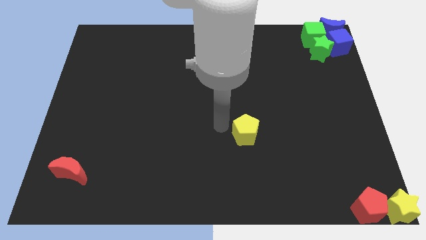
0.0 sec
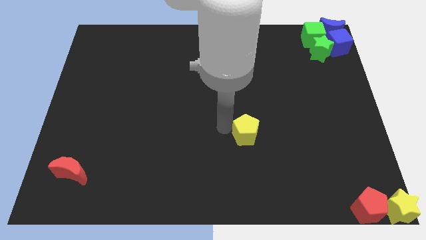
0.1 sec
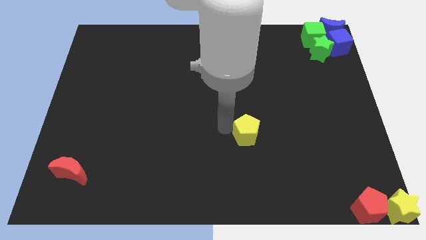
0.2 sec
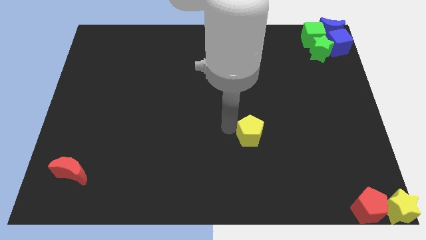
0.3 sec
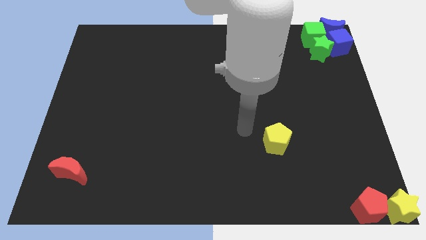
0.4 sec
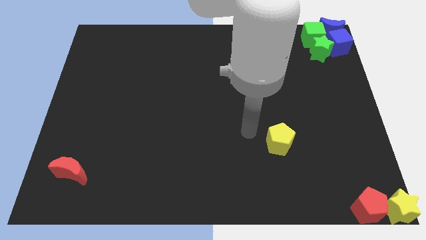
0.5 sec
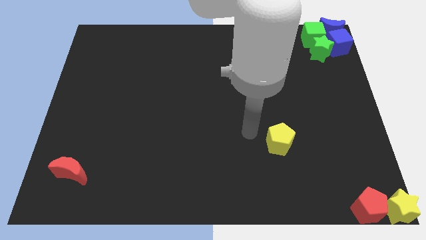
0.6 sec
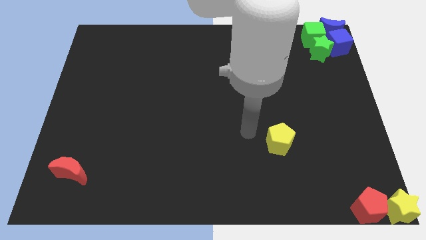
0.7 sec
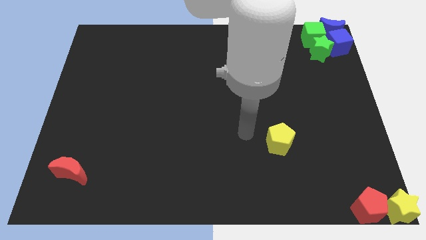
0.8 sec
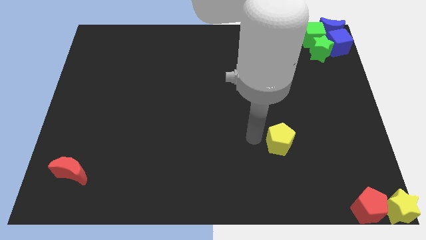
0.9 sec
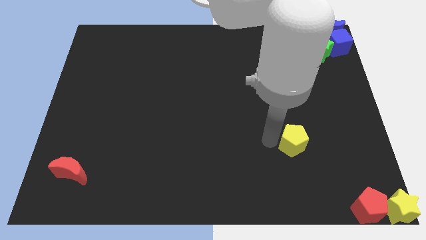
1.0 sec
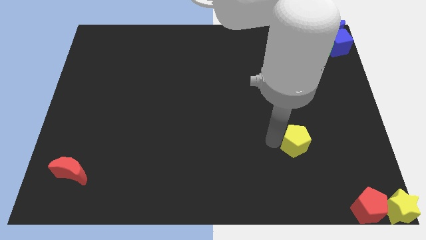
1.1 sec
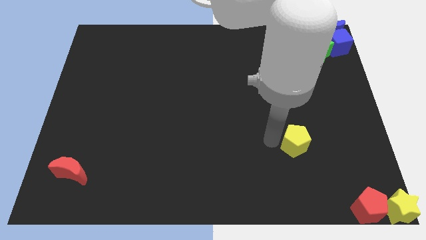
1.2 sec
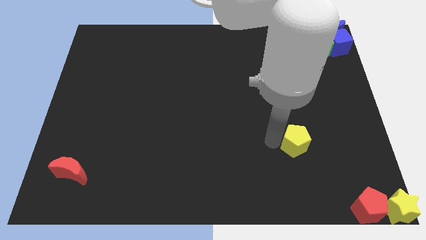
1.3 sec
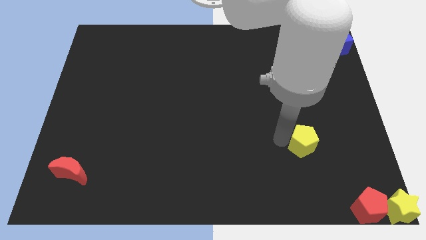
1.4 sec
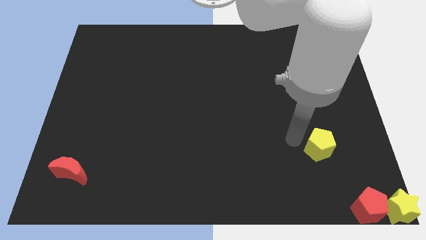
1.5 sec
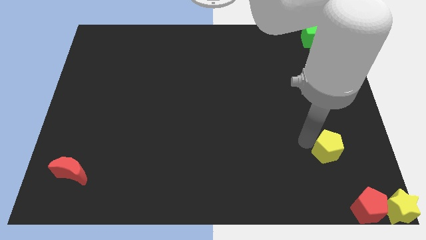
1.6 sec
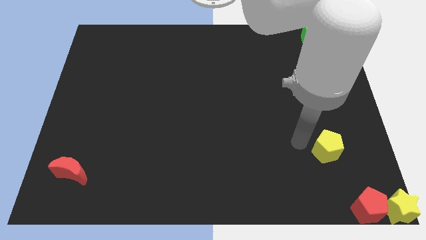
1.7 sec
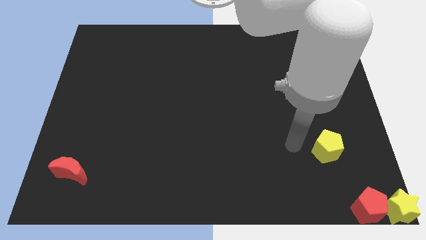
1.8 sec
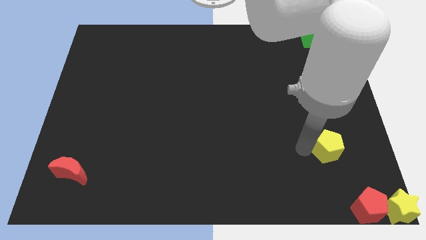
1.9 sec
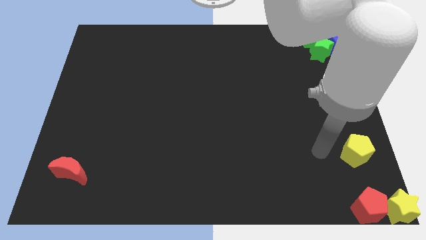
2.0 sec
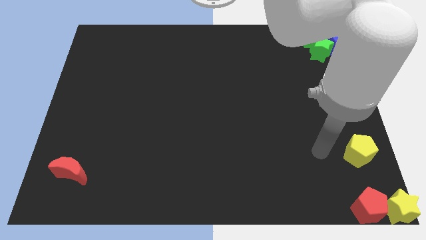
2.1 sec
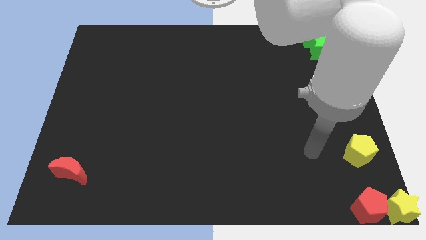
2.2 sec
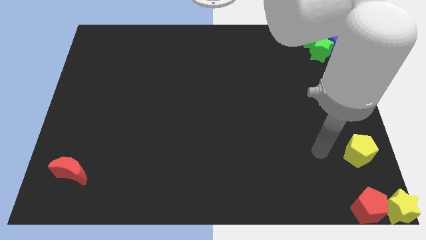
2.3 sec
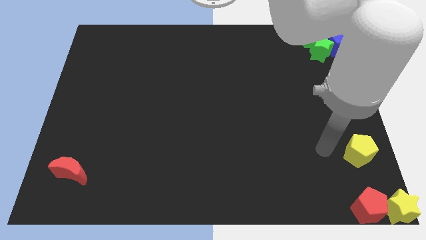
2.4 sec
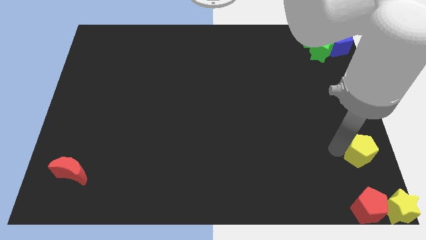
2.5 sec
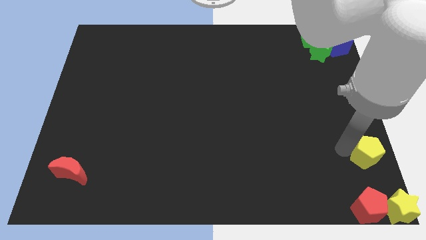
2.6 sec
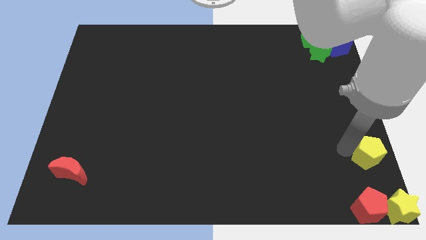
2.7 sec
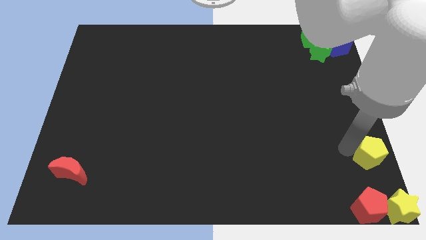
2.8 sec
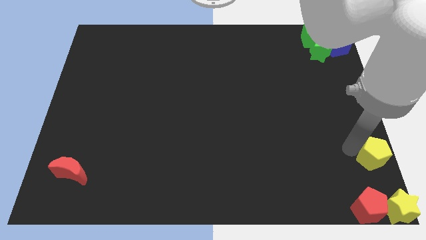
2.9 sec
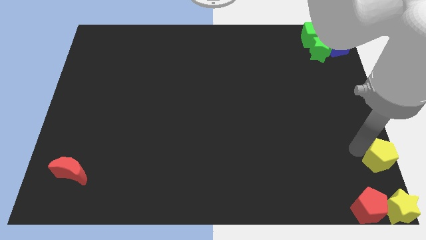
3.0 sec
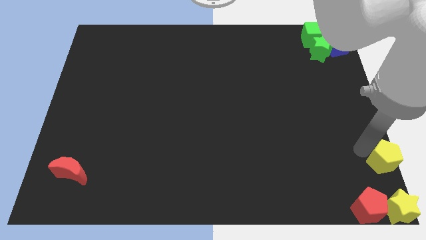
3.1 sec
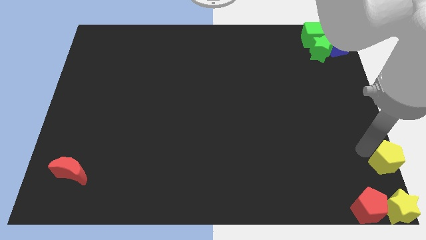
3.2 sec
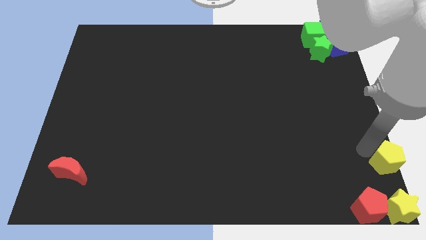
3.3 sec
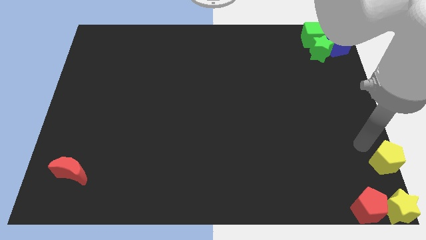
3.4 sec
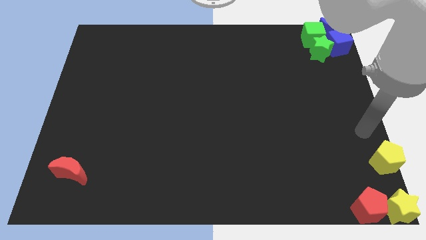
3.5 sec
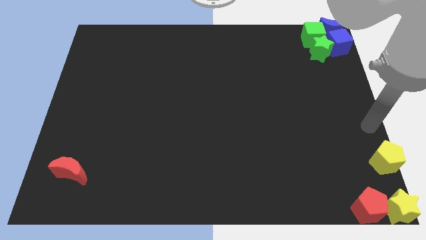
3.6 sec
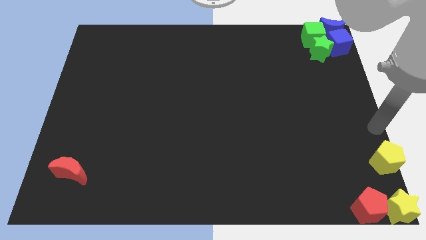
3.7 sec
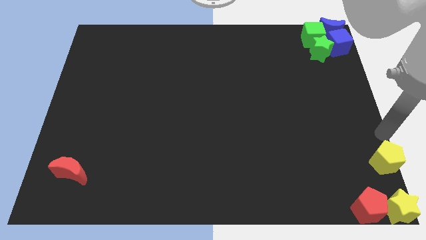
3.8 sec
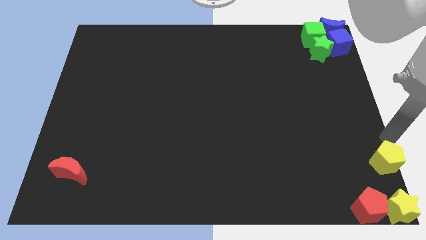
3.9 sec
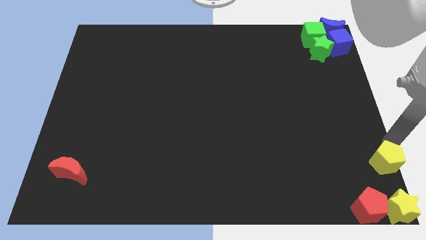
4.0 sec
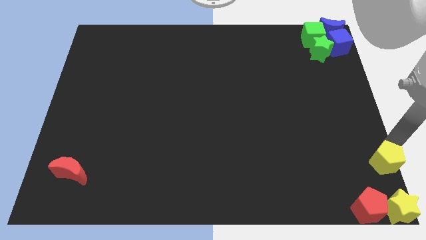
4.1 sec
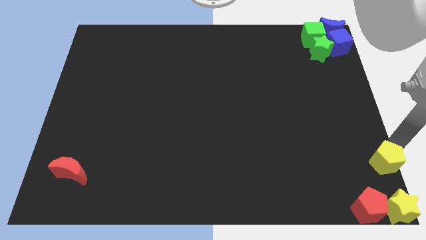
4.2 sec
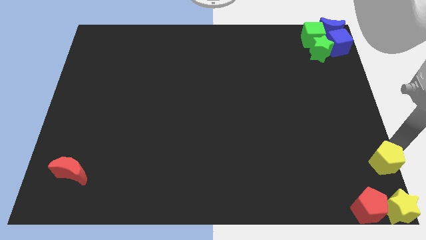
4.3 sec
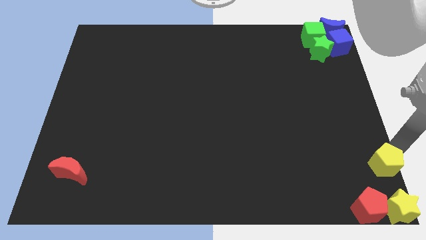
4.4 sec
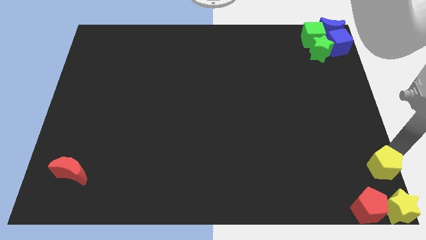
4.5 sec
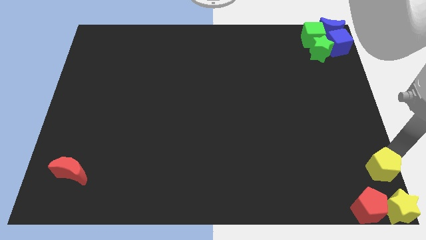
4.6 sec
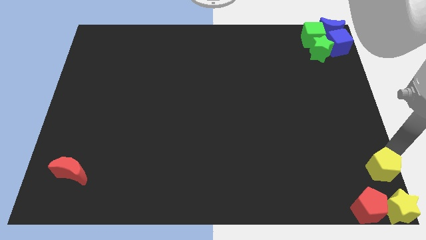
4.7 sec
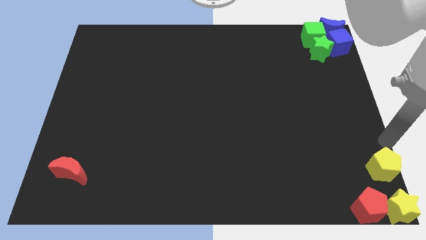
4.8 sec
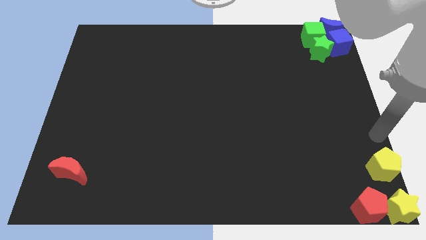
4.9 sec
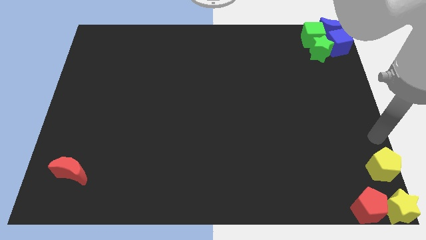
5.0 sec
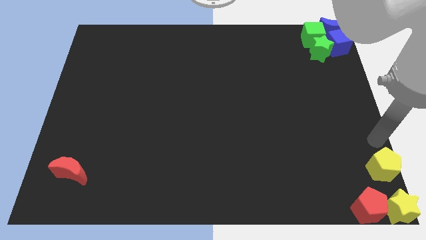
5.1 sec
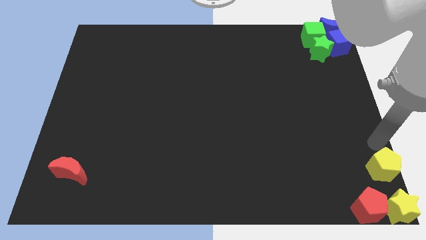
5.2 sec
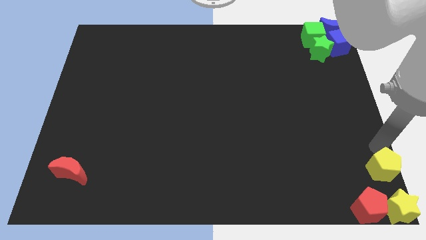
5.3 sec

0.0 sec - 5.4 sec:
place the yellow pentagon at the top of the yellow star

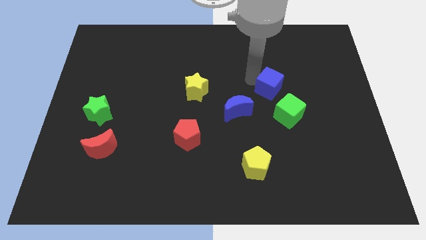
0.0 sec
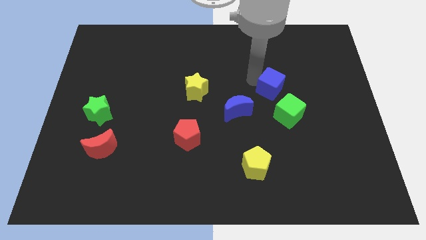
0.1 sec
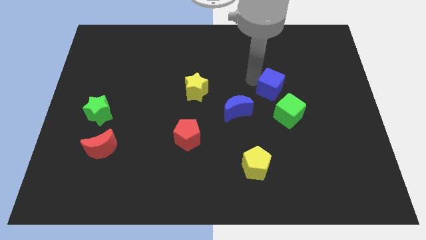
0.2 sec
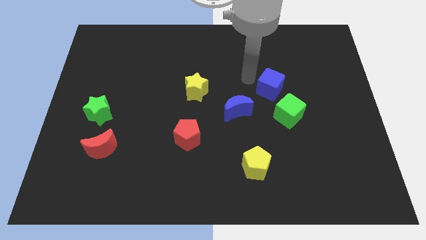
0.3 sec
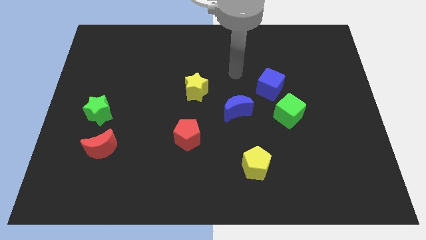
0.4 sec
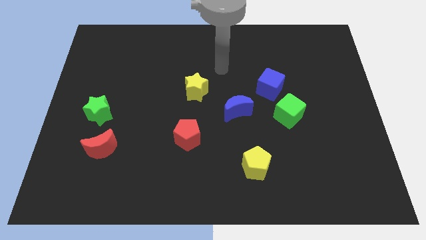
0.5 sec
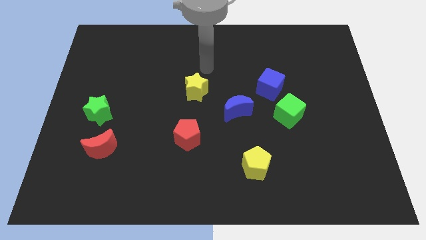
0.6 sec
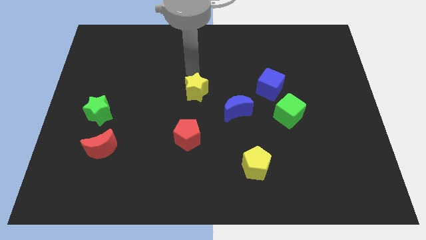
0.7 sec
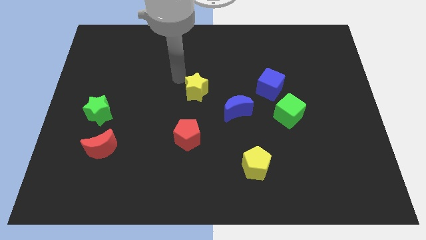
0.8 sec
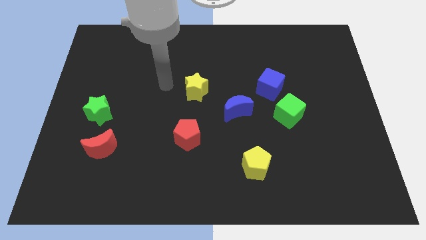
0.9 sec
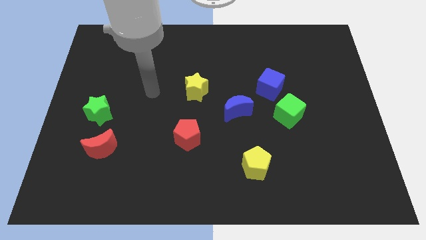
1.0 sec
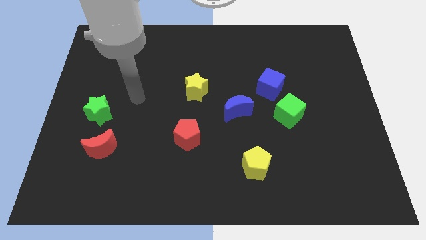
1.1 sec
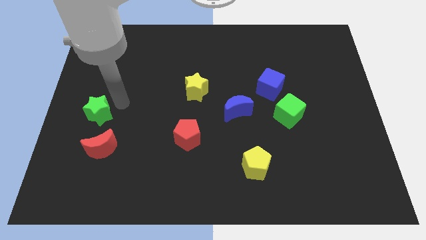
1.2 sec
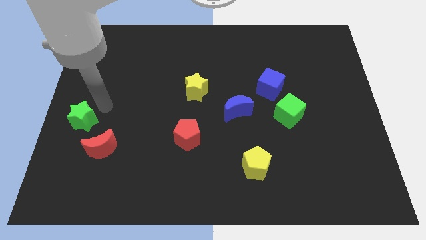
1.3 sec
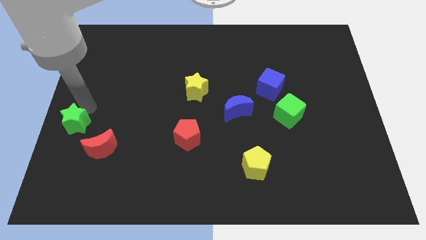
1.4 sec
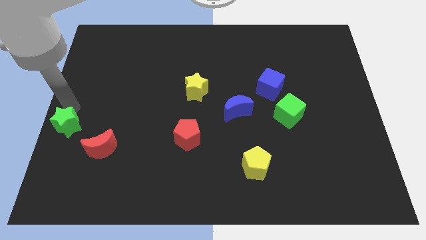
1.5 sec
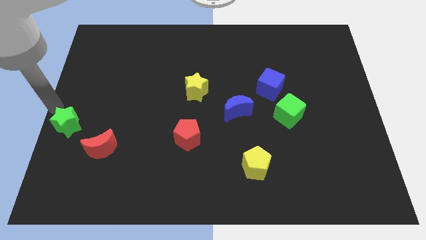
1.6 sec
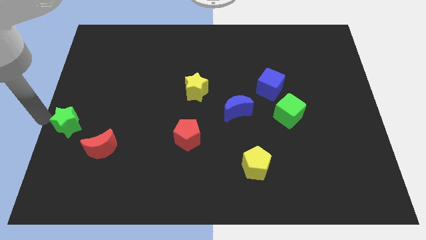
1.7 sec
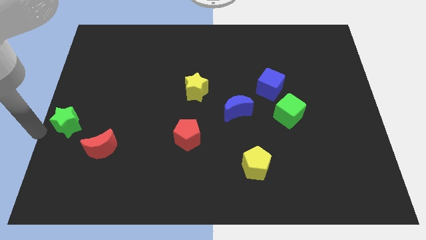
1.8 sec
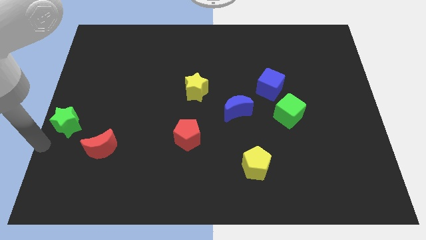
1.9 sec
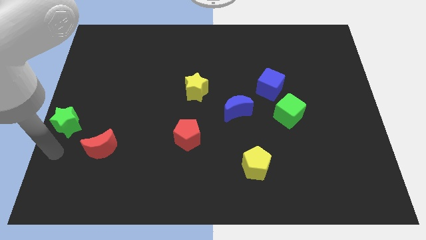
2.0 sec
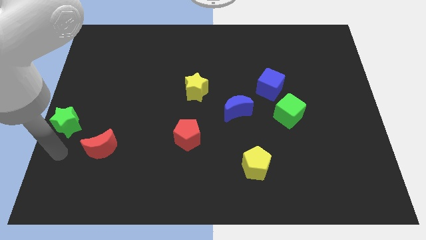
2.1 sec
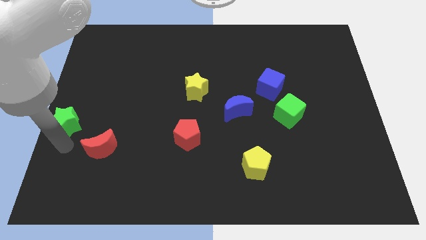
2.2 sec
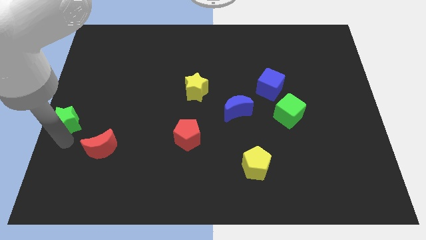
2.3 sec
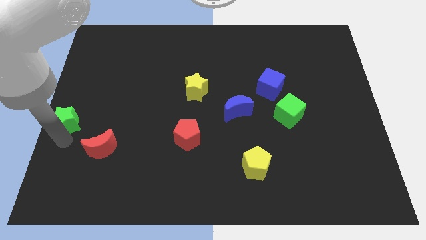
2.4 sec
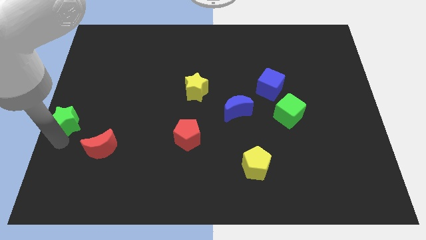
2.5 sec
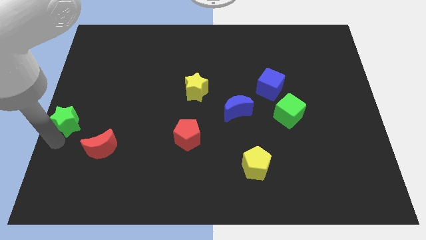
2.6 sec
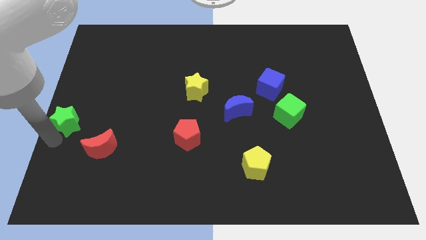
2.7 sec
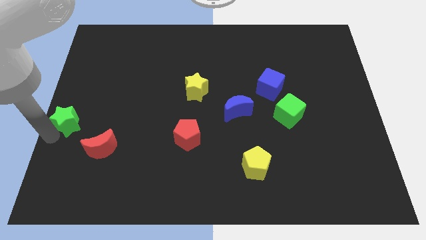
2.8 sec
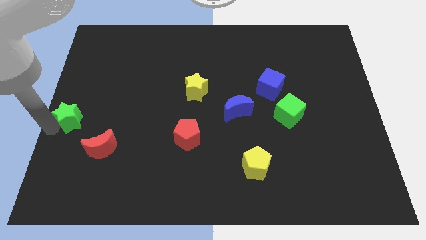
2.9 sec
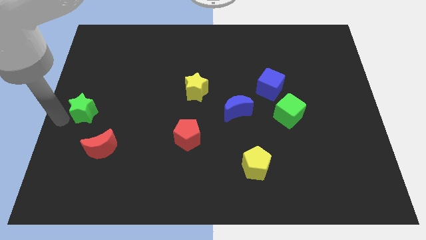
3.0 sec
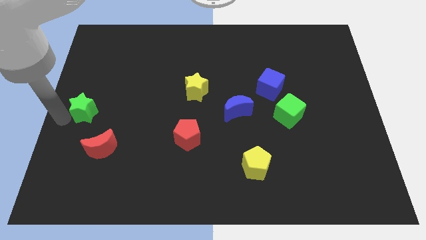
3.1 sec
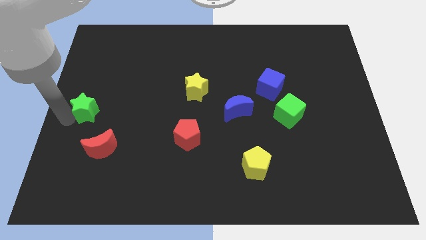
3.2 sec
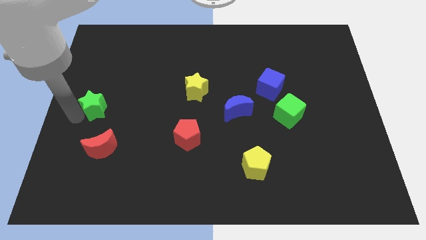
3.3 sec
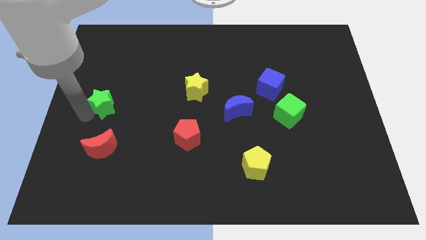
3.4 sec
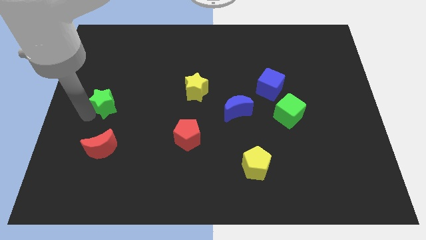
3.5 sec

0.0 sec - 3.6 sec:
place the green star above the red moon
